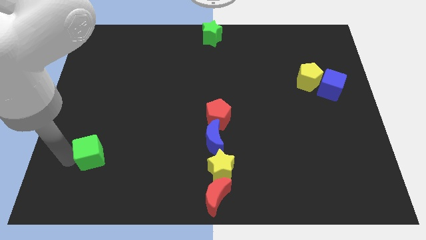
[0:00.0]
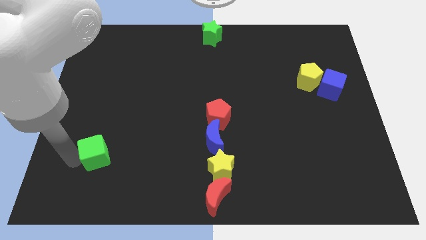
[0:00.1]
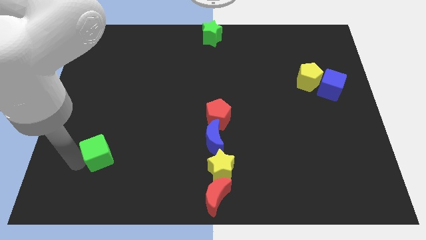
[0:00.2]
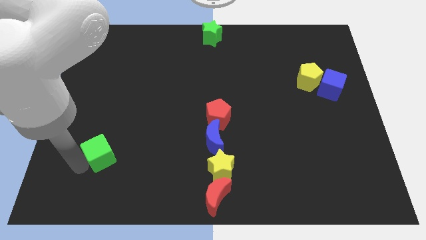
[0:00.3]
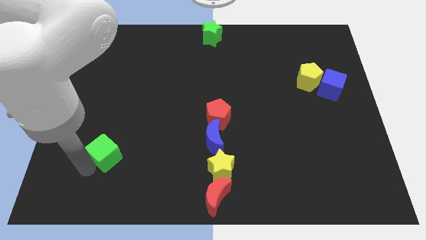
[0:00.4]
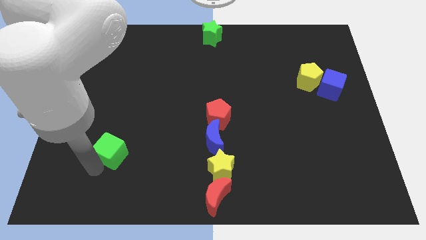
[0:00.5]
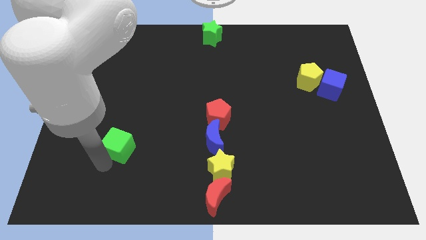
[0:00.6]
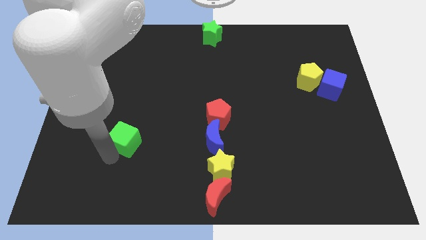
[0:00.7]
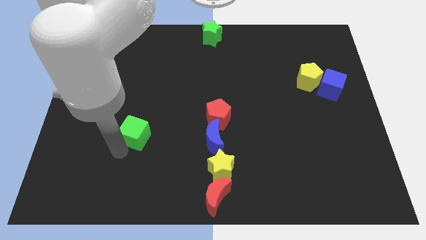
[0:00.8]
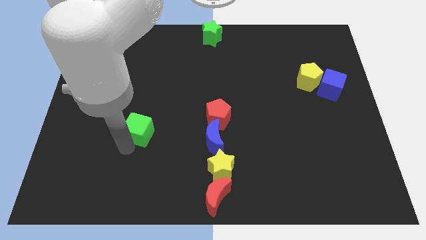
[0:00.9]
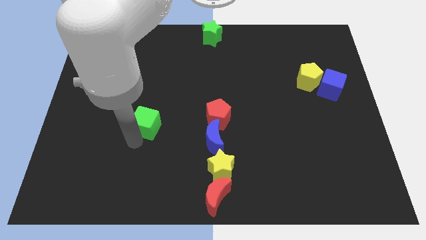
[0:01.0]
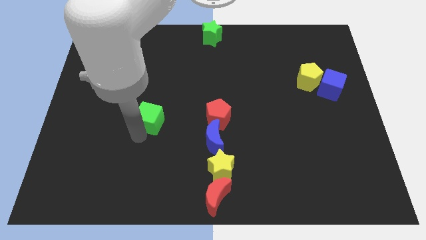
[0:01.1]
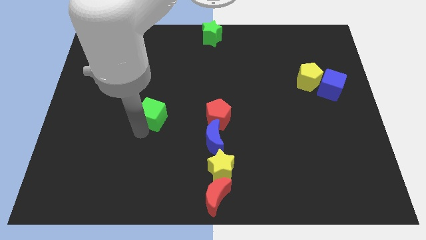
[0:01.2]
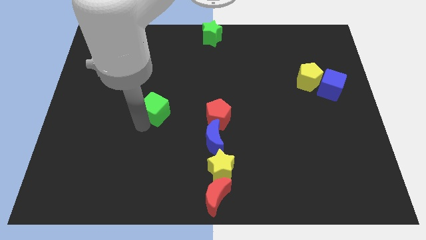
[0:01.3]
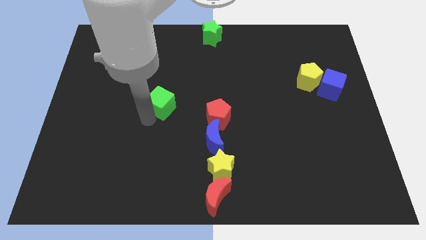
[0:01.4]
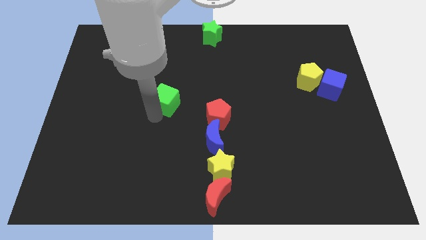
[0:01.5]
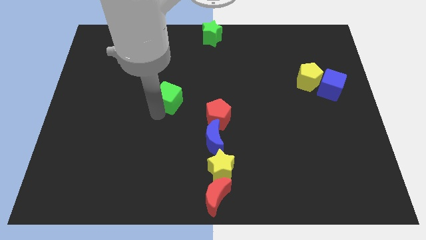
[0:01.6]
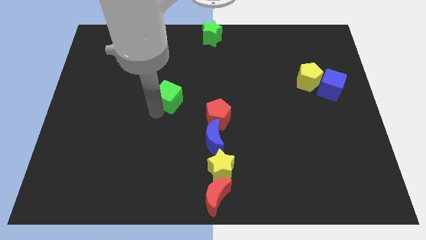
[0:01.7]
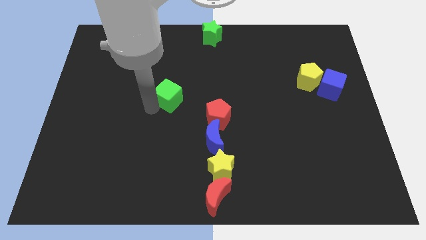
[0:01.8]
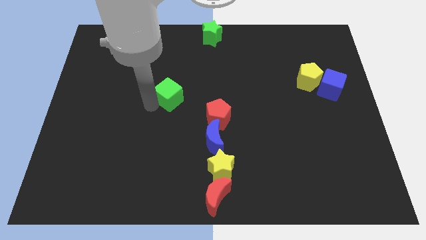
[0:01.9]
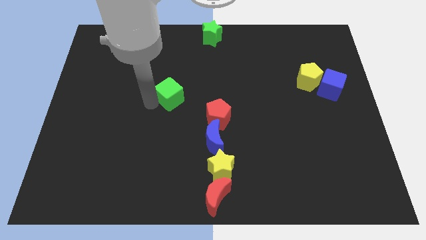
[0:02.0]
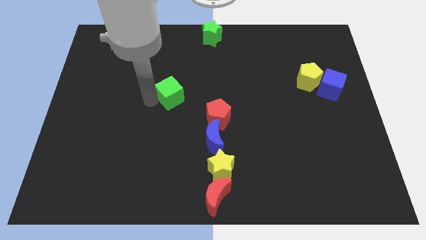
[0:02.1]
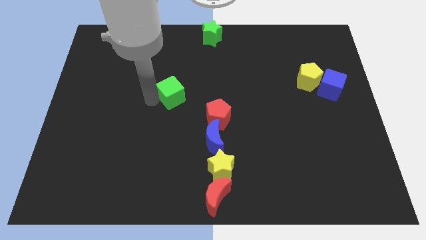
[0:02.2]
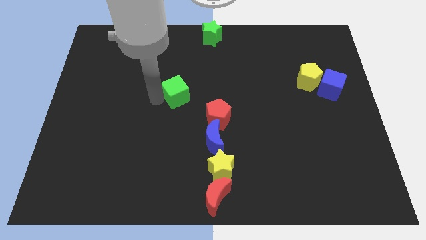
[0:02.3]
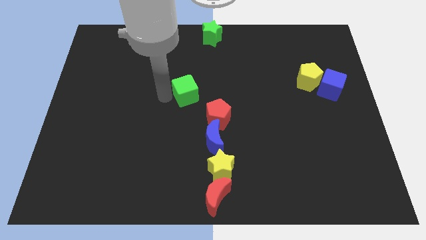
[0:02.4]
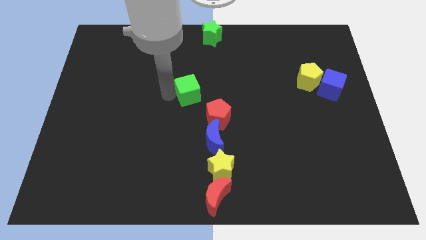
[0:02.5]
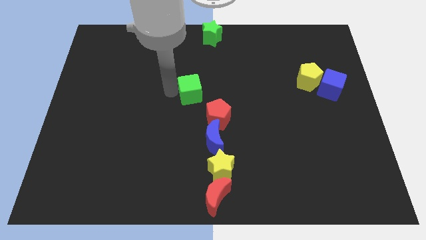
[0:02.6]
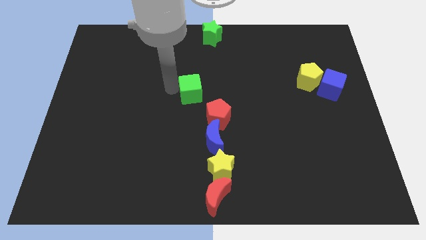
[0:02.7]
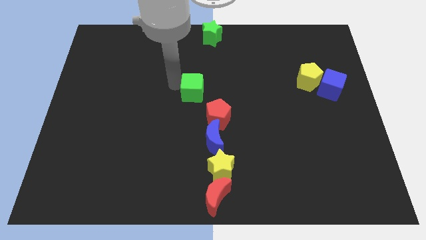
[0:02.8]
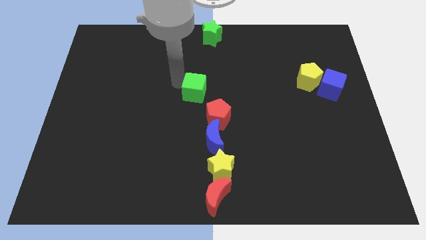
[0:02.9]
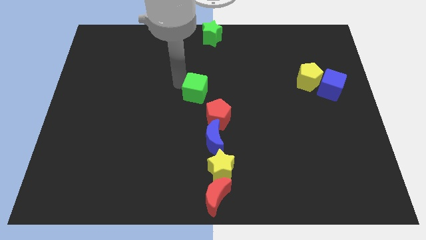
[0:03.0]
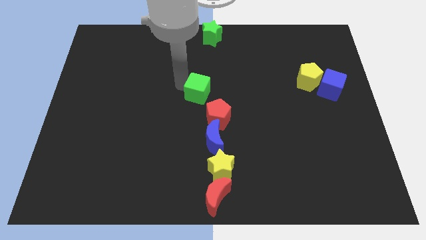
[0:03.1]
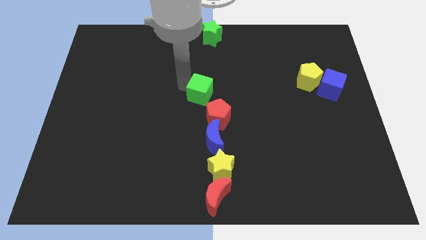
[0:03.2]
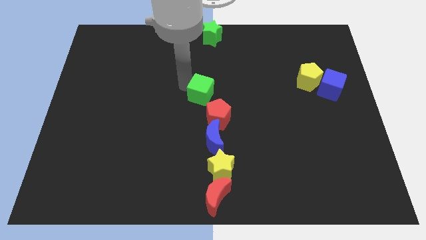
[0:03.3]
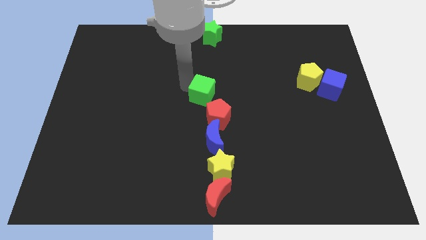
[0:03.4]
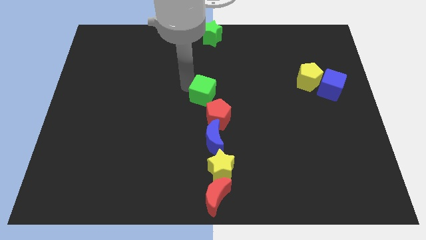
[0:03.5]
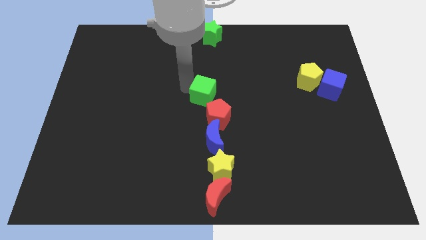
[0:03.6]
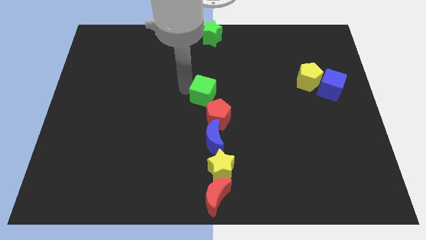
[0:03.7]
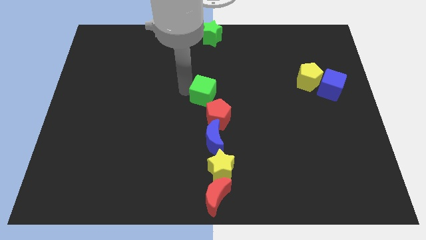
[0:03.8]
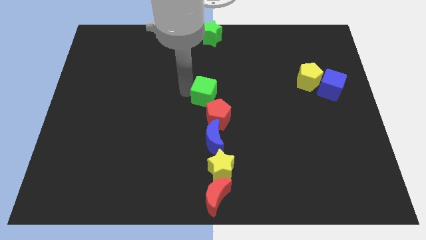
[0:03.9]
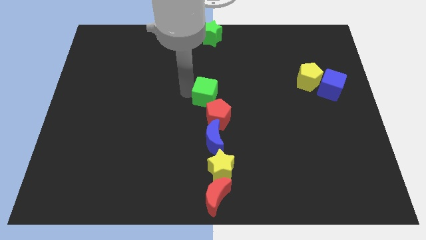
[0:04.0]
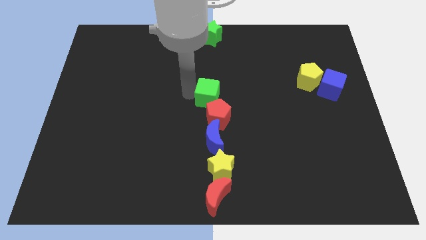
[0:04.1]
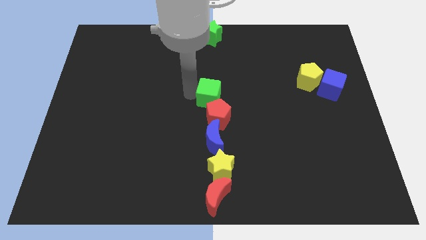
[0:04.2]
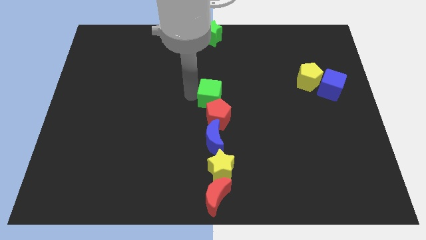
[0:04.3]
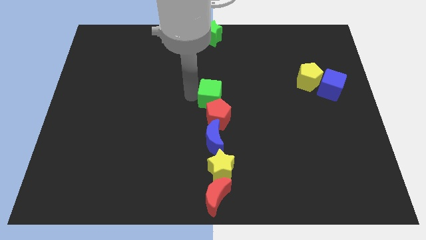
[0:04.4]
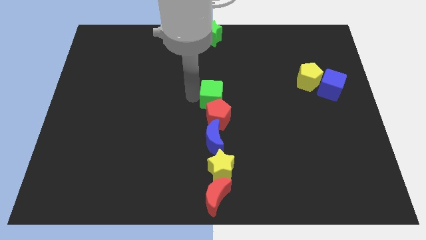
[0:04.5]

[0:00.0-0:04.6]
place green cube above red pentagon

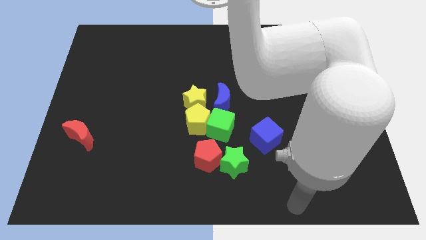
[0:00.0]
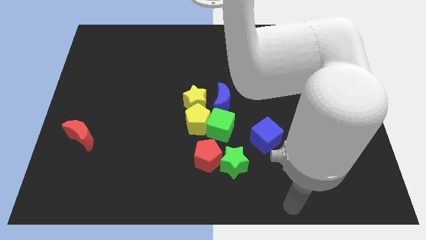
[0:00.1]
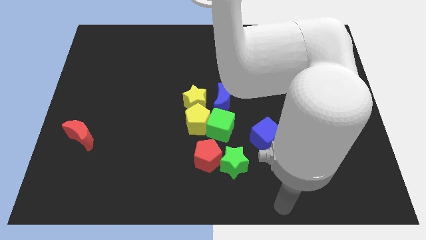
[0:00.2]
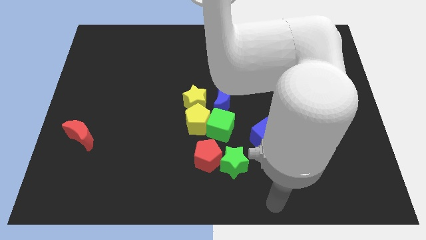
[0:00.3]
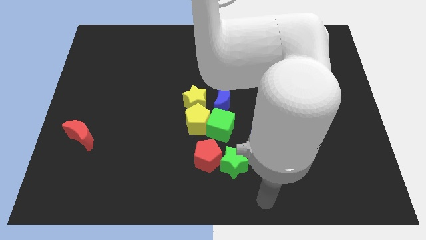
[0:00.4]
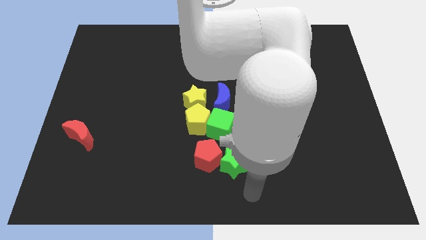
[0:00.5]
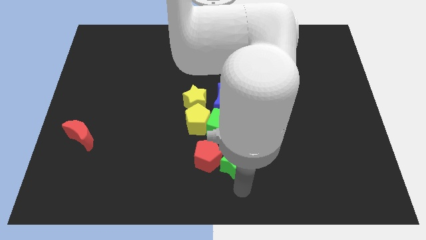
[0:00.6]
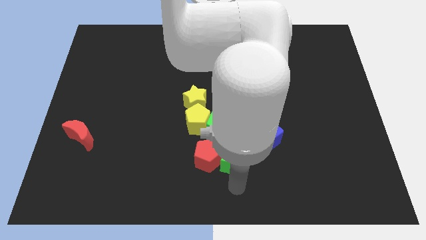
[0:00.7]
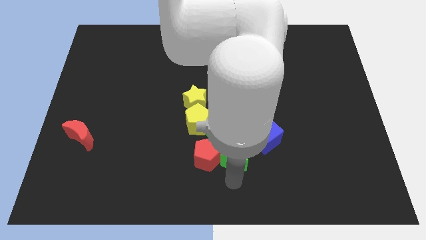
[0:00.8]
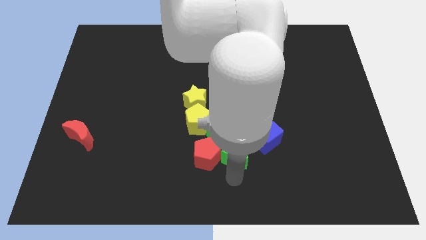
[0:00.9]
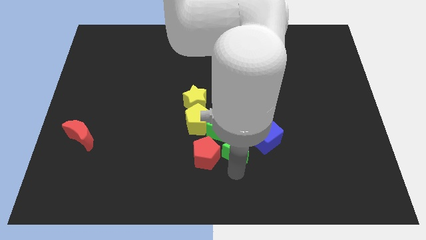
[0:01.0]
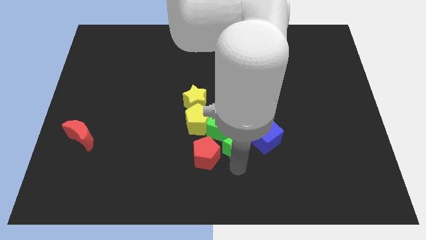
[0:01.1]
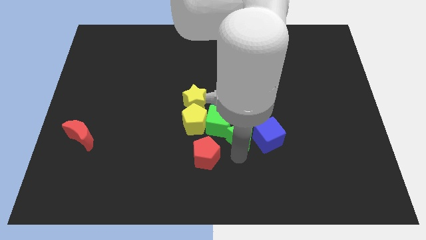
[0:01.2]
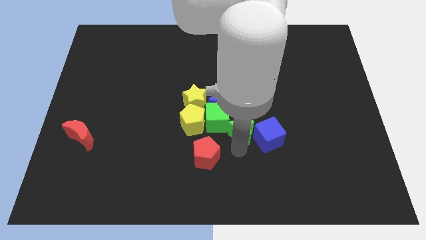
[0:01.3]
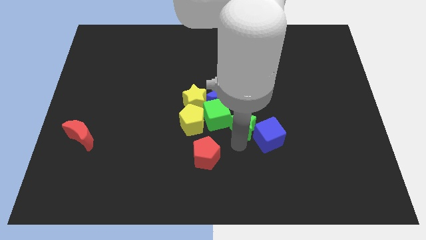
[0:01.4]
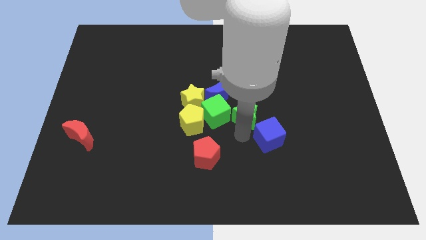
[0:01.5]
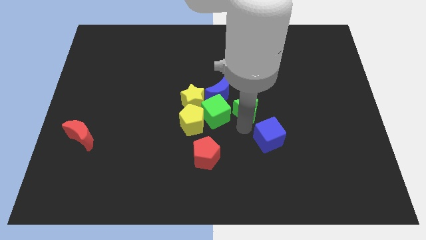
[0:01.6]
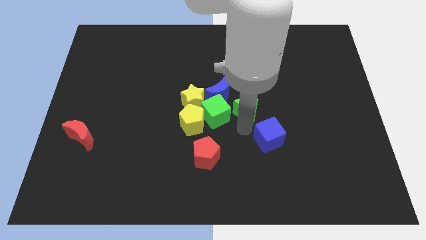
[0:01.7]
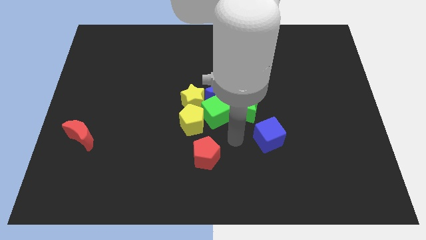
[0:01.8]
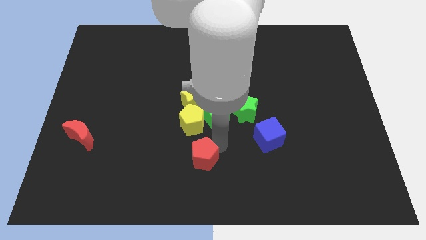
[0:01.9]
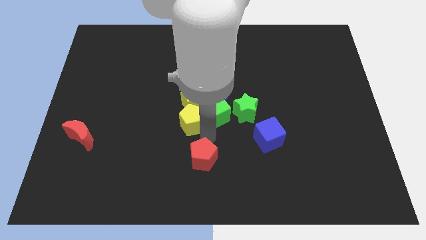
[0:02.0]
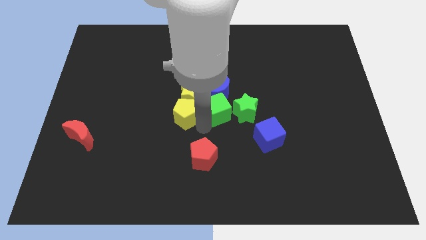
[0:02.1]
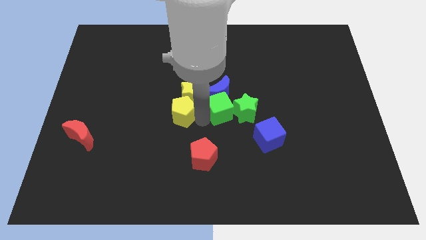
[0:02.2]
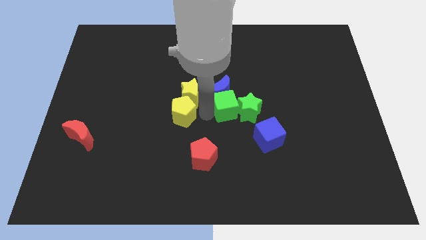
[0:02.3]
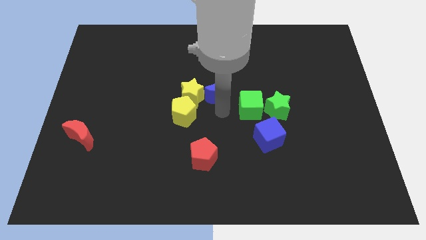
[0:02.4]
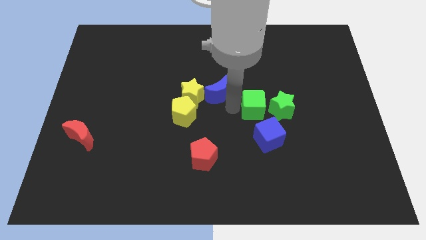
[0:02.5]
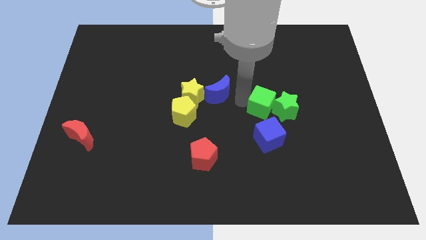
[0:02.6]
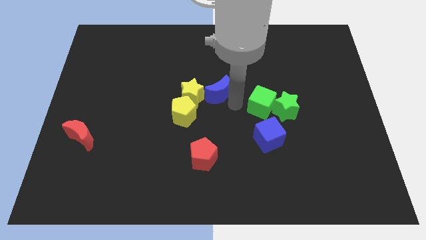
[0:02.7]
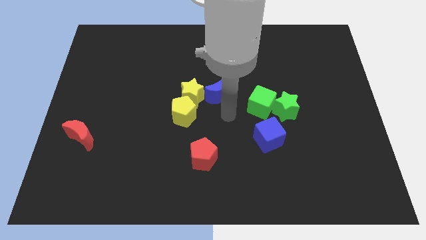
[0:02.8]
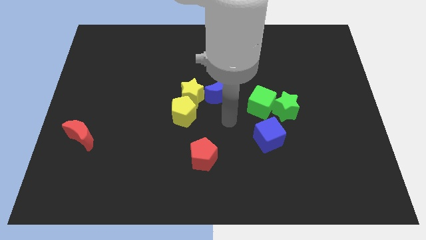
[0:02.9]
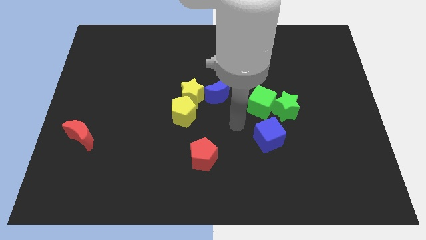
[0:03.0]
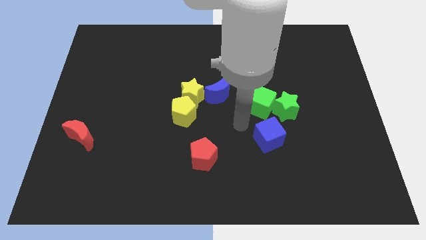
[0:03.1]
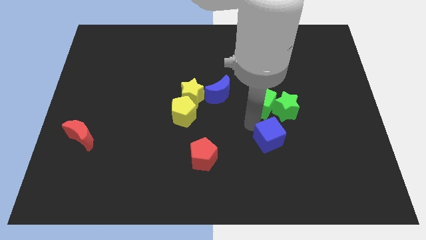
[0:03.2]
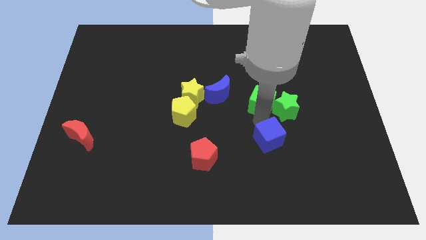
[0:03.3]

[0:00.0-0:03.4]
move the green star and the green cube to the right

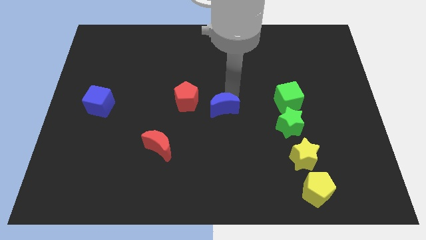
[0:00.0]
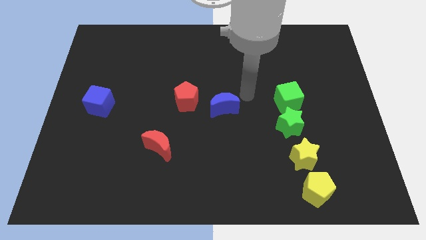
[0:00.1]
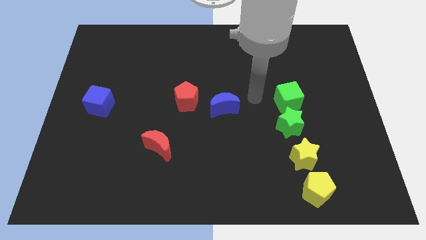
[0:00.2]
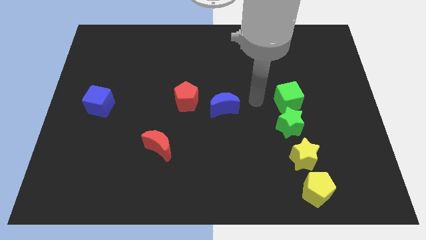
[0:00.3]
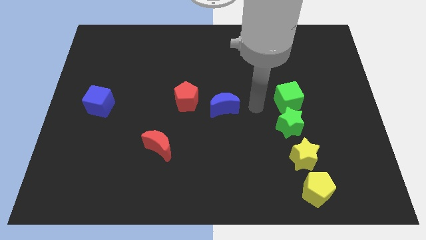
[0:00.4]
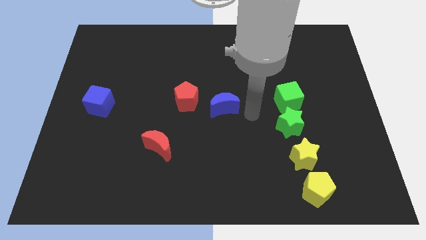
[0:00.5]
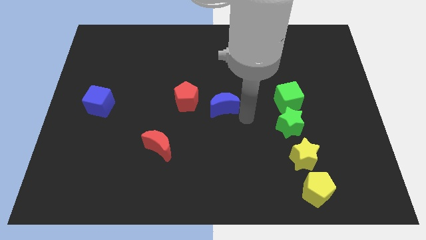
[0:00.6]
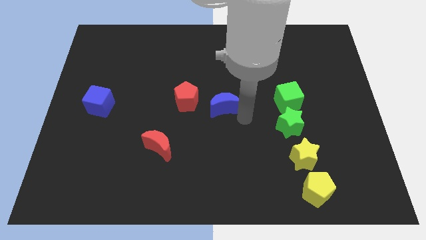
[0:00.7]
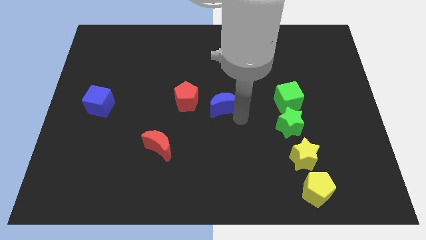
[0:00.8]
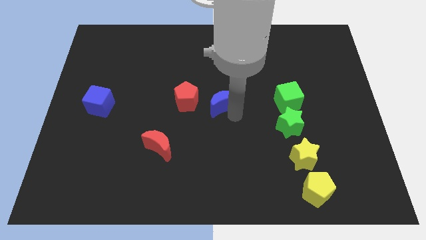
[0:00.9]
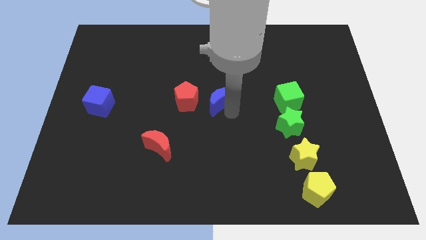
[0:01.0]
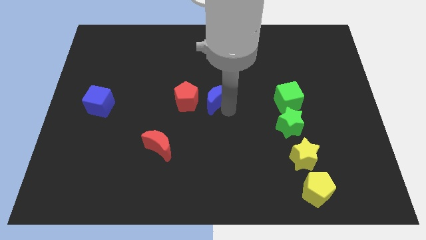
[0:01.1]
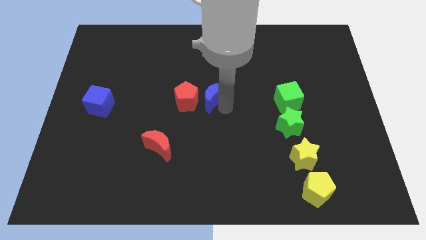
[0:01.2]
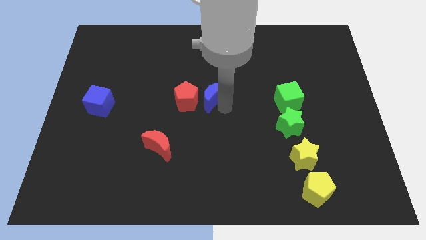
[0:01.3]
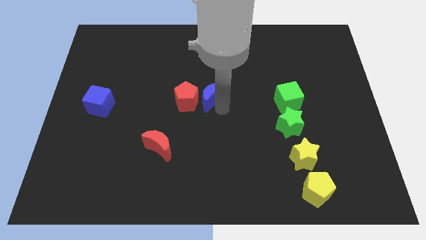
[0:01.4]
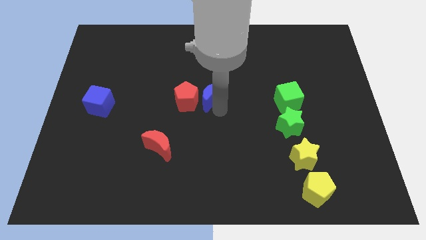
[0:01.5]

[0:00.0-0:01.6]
place blue moon to the right side of the red pentagon
